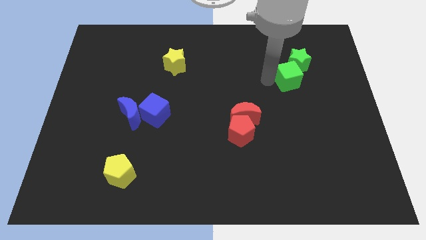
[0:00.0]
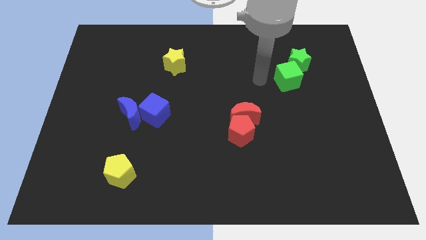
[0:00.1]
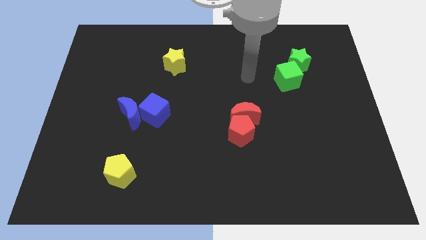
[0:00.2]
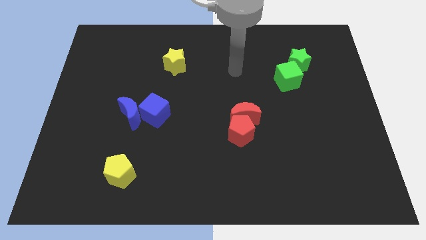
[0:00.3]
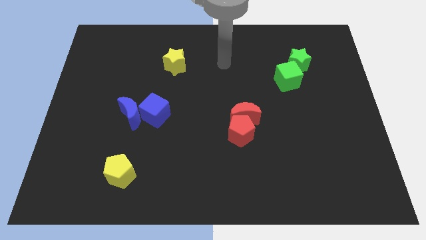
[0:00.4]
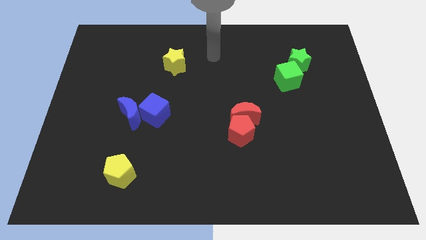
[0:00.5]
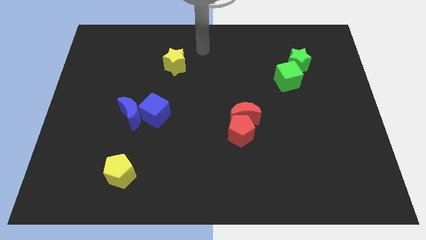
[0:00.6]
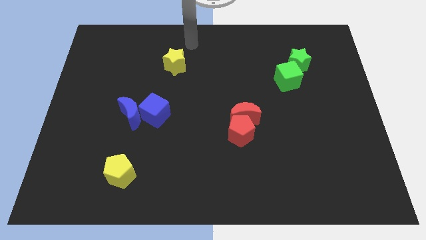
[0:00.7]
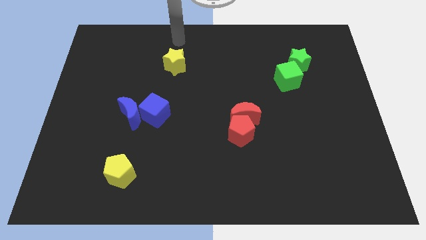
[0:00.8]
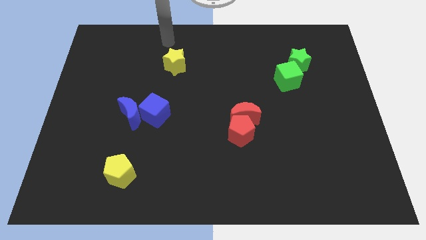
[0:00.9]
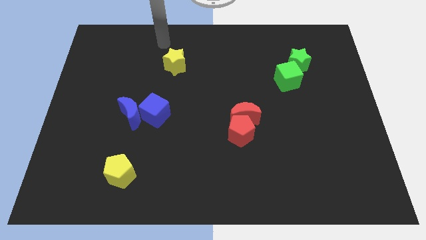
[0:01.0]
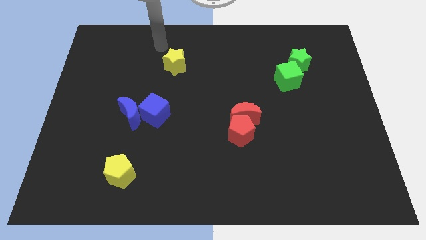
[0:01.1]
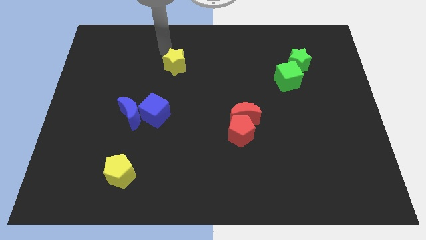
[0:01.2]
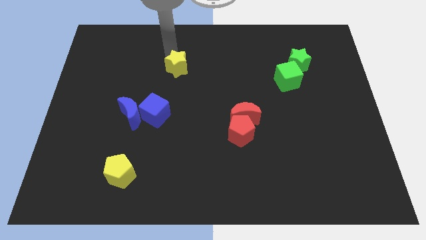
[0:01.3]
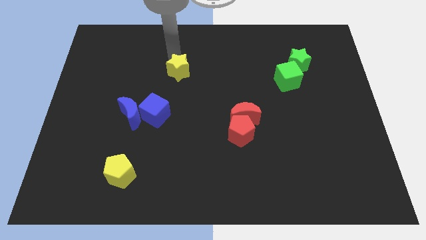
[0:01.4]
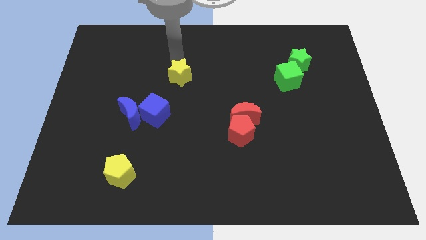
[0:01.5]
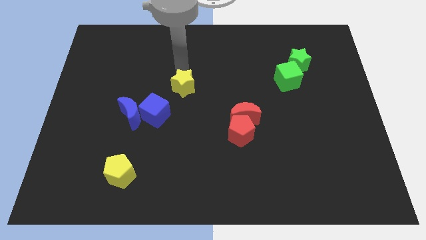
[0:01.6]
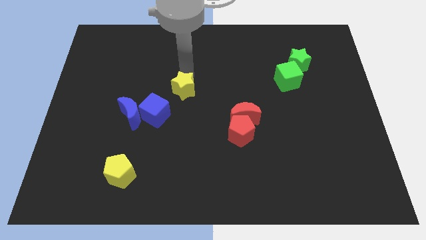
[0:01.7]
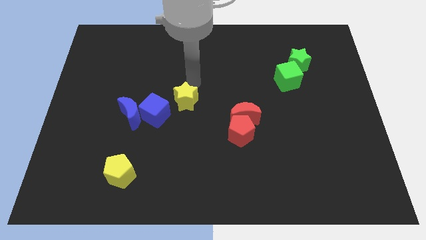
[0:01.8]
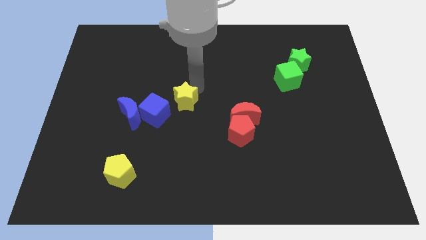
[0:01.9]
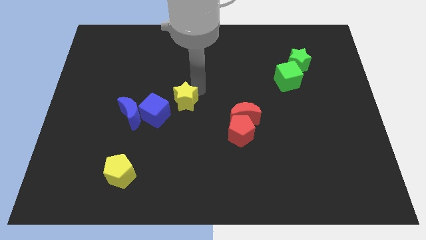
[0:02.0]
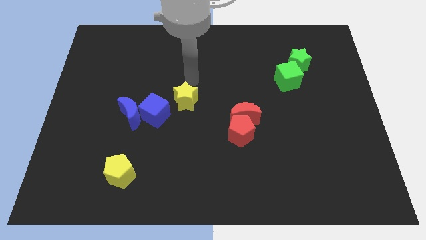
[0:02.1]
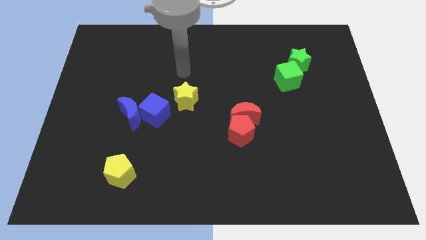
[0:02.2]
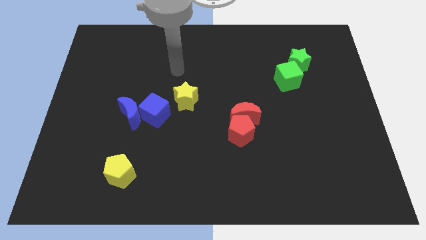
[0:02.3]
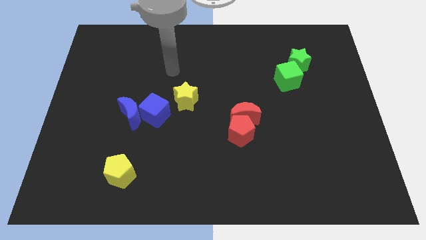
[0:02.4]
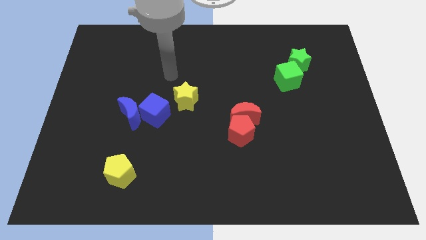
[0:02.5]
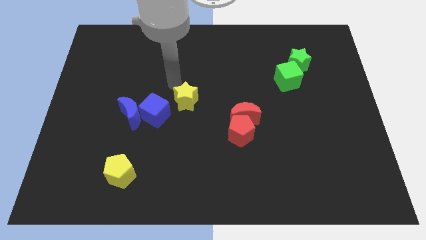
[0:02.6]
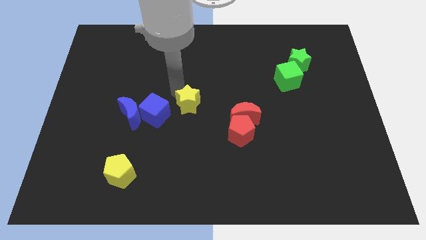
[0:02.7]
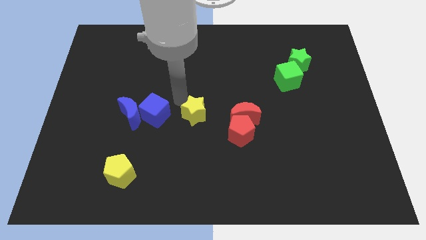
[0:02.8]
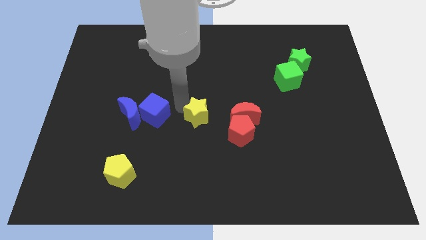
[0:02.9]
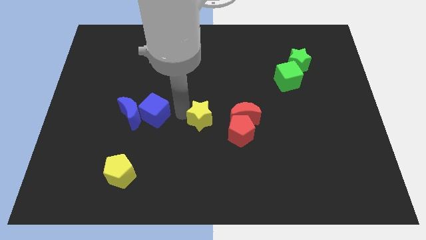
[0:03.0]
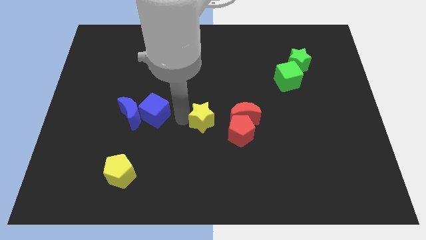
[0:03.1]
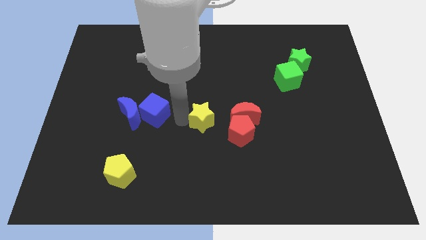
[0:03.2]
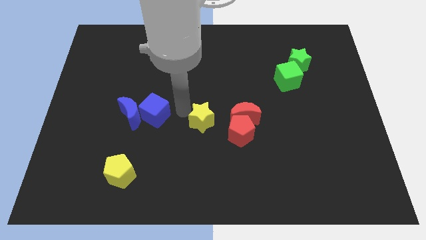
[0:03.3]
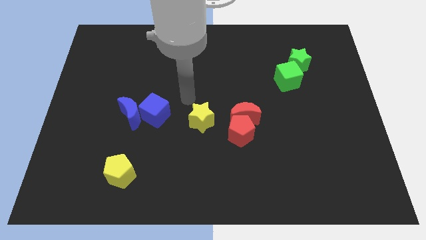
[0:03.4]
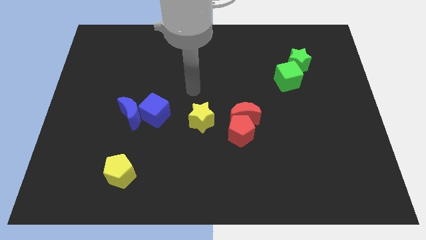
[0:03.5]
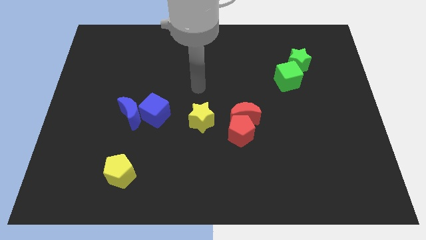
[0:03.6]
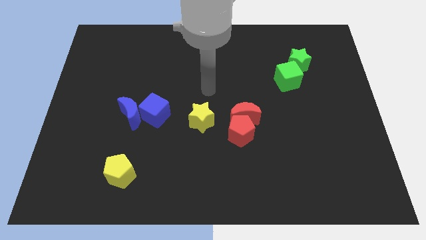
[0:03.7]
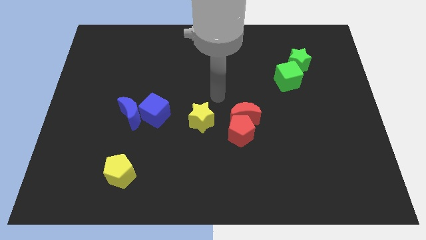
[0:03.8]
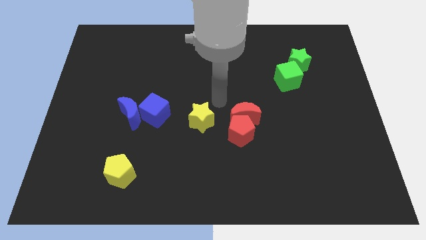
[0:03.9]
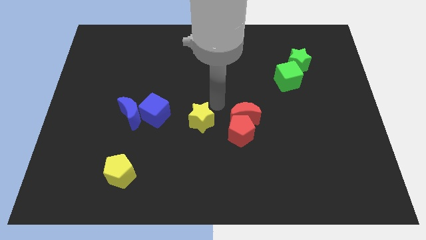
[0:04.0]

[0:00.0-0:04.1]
slide yellow star to the center

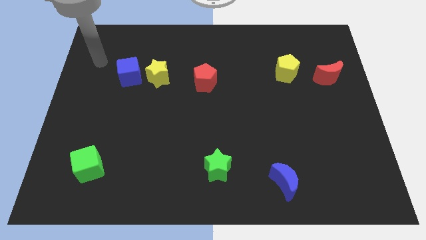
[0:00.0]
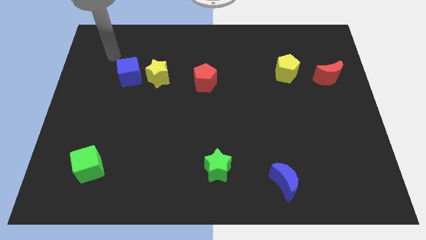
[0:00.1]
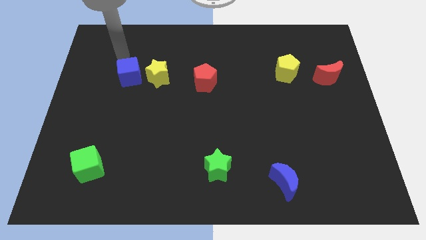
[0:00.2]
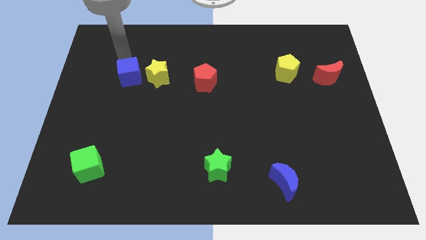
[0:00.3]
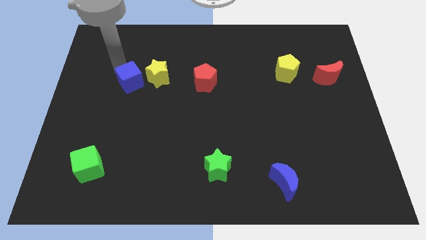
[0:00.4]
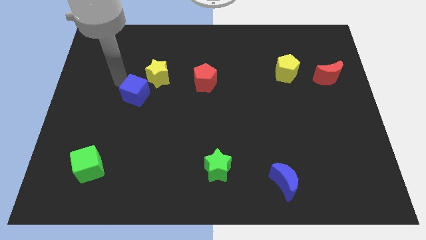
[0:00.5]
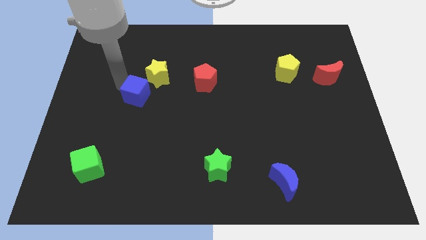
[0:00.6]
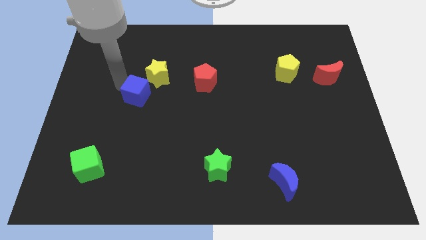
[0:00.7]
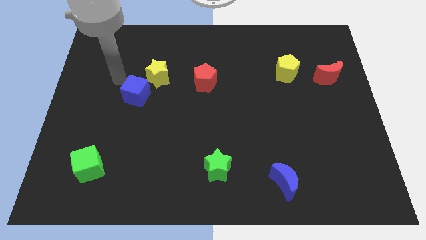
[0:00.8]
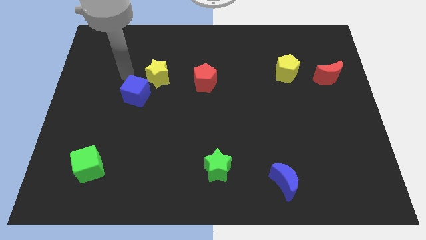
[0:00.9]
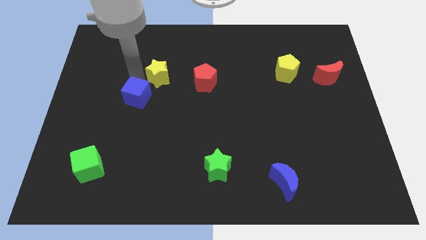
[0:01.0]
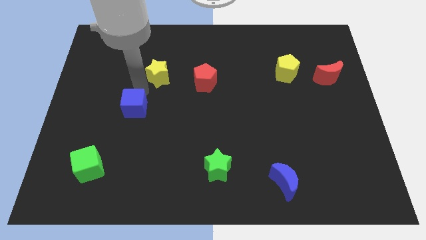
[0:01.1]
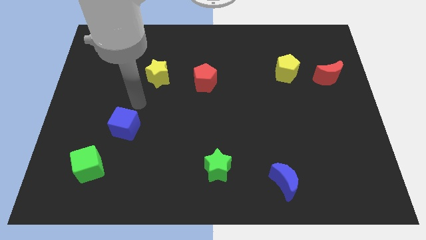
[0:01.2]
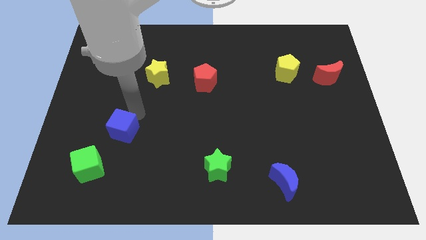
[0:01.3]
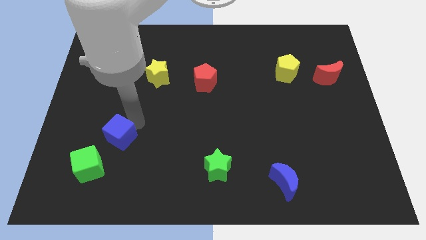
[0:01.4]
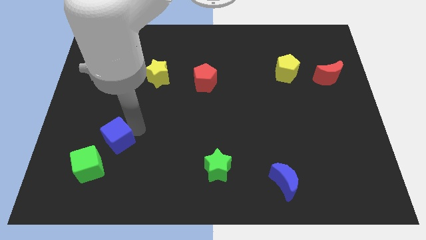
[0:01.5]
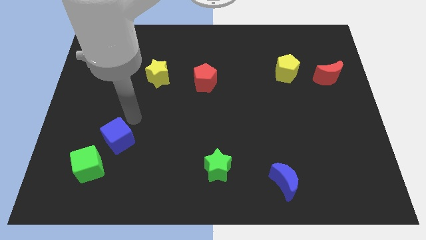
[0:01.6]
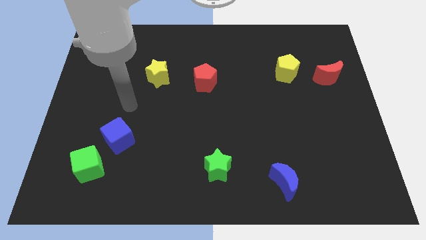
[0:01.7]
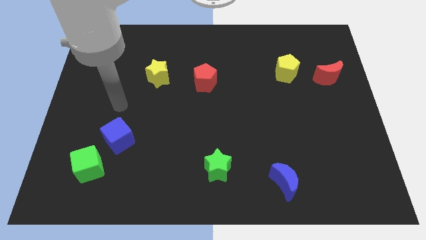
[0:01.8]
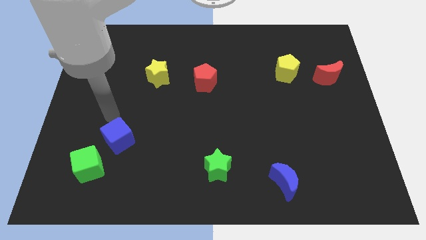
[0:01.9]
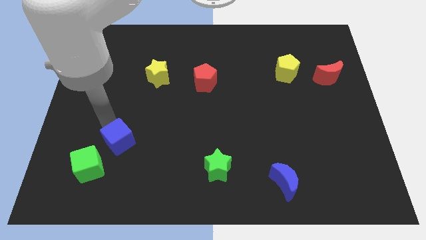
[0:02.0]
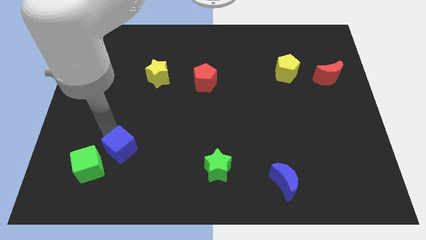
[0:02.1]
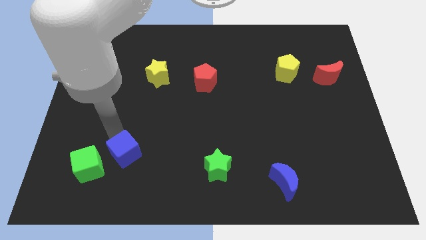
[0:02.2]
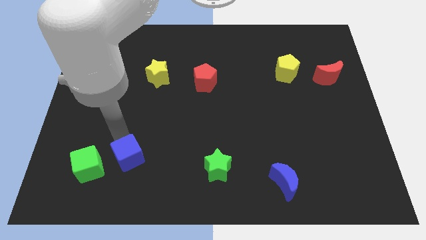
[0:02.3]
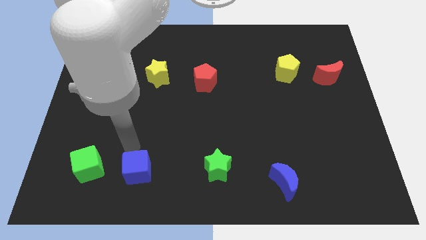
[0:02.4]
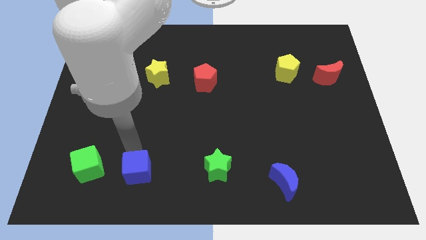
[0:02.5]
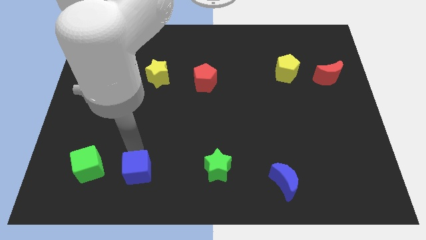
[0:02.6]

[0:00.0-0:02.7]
drag the blue cube downwards in the board

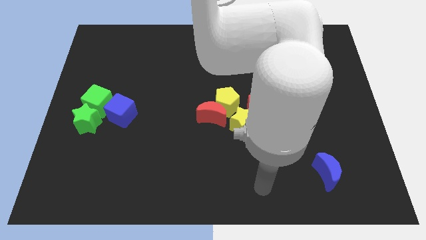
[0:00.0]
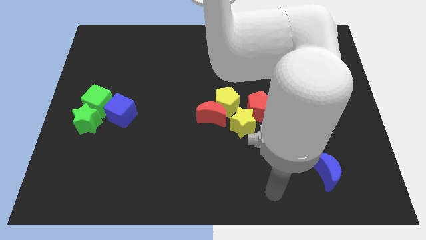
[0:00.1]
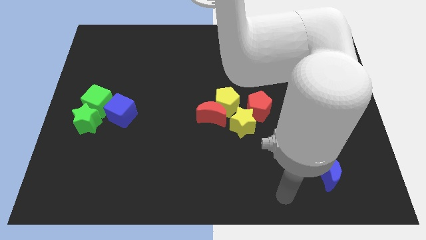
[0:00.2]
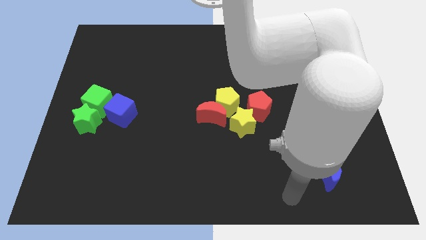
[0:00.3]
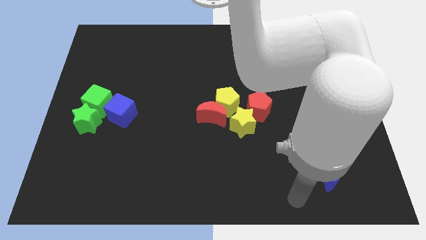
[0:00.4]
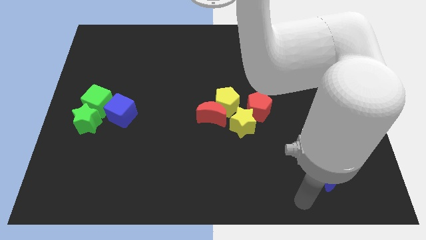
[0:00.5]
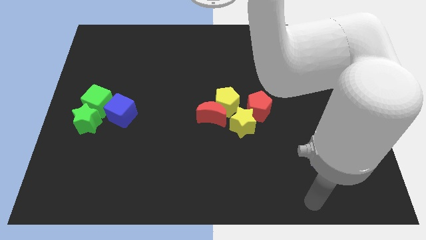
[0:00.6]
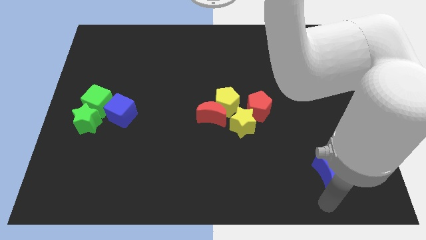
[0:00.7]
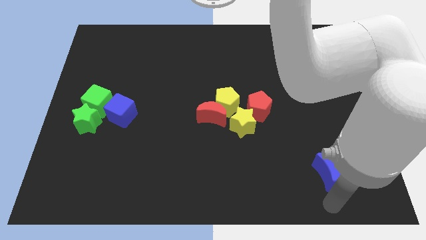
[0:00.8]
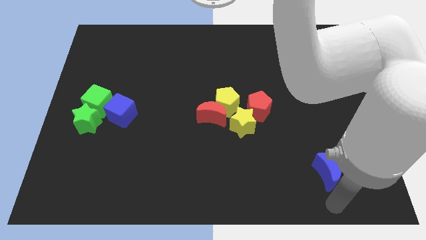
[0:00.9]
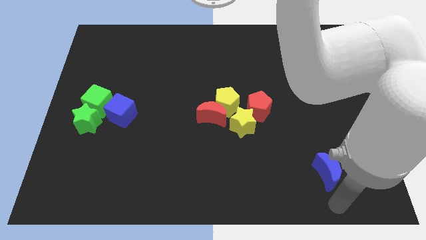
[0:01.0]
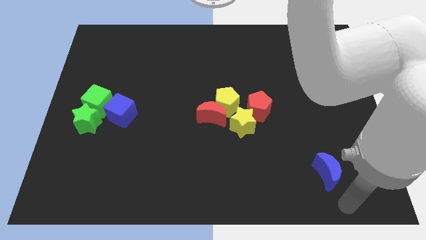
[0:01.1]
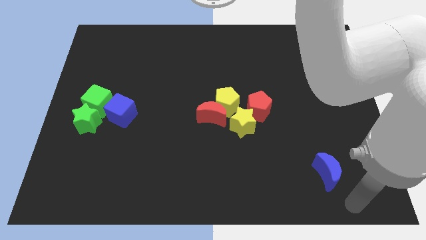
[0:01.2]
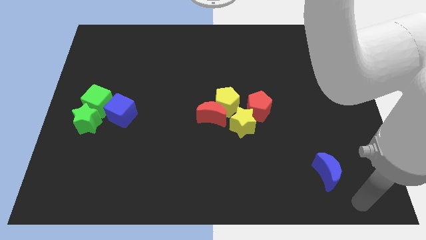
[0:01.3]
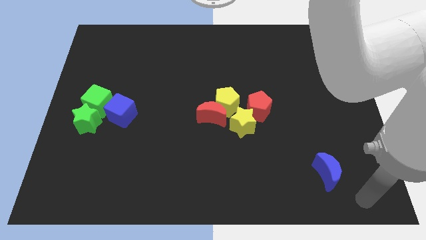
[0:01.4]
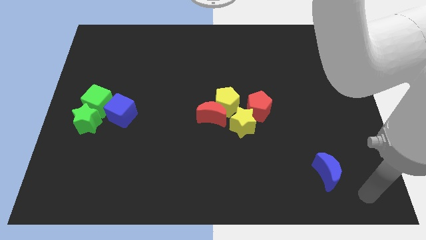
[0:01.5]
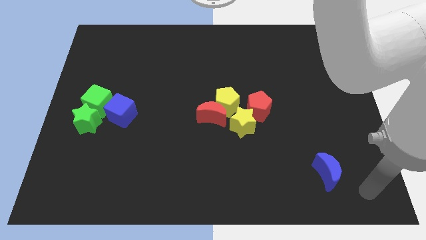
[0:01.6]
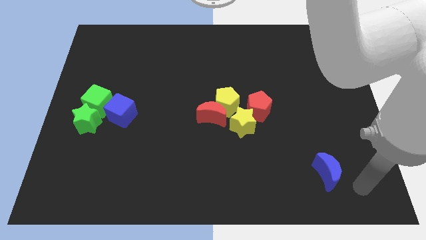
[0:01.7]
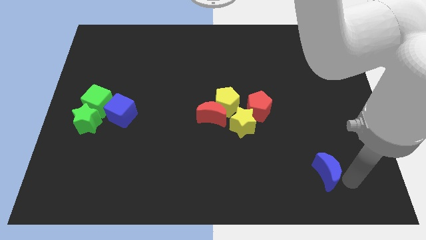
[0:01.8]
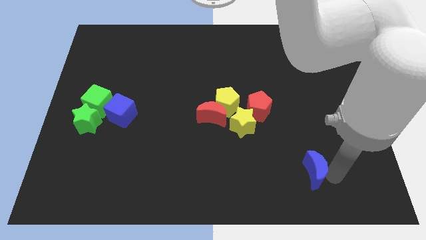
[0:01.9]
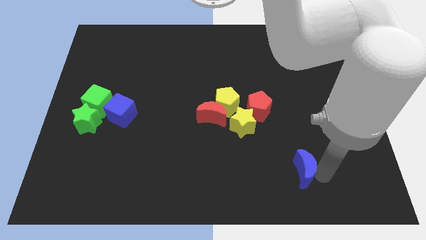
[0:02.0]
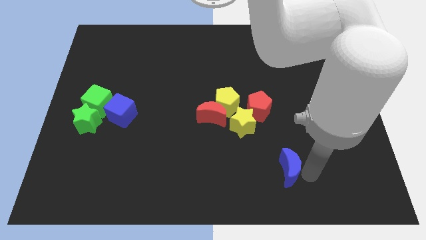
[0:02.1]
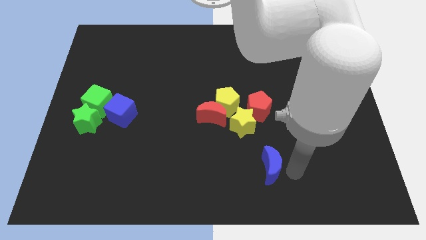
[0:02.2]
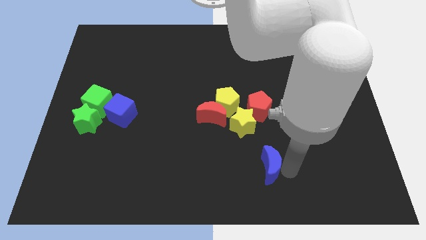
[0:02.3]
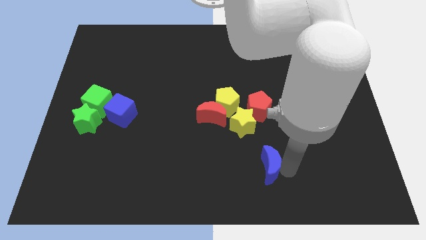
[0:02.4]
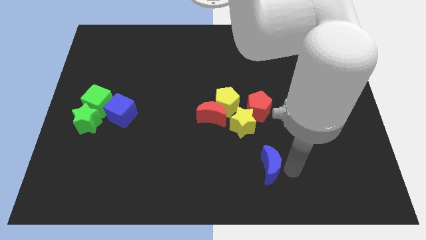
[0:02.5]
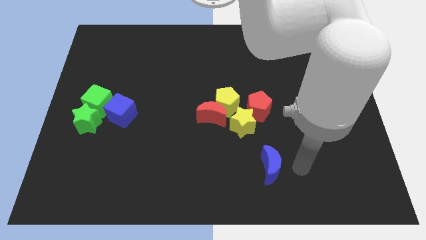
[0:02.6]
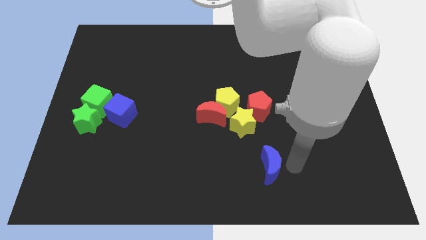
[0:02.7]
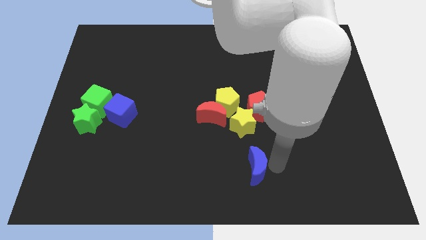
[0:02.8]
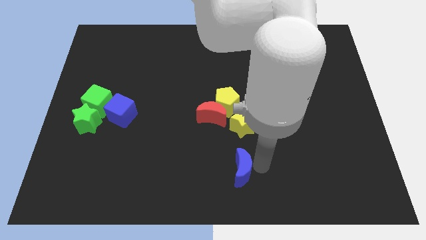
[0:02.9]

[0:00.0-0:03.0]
move the blue crescent vertical to the yellow star
